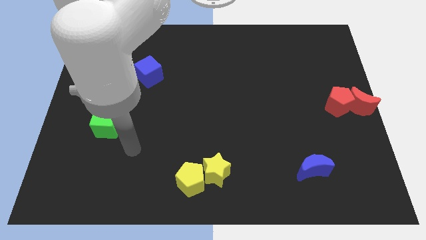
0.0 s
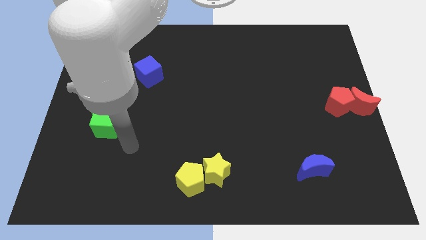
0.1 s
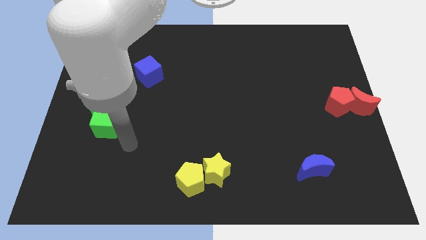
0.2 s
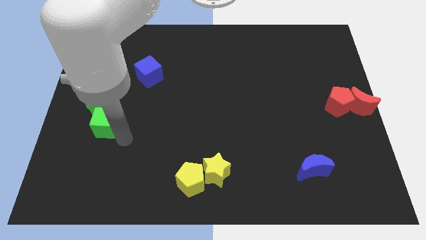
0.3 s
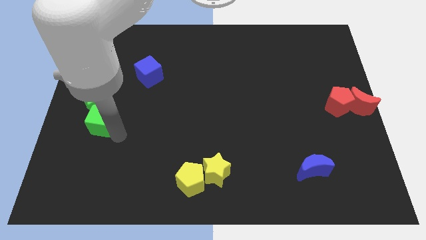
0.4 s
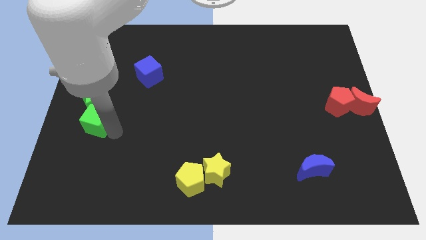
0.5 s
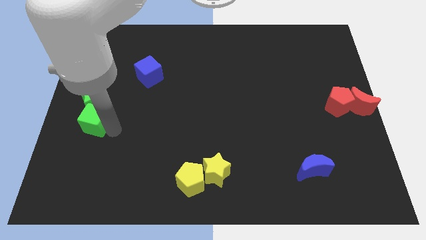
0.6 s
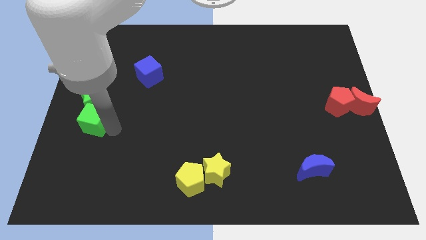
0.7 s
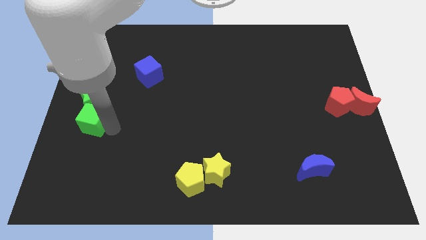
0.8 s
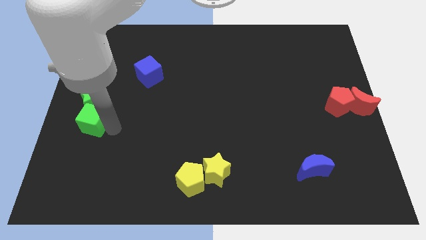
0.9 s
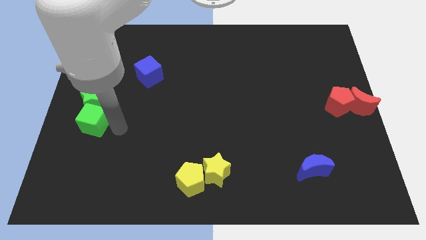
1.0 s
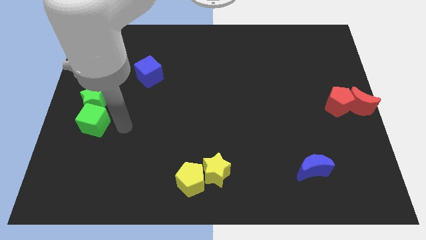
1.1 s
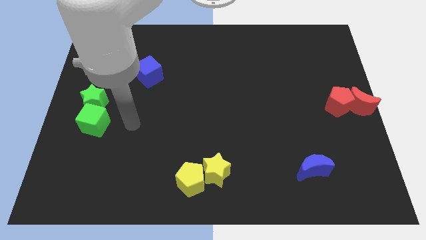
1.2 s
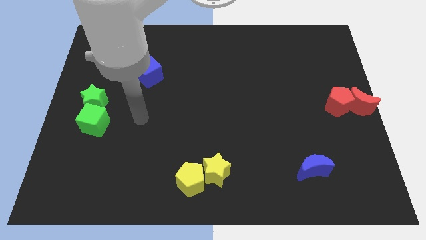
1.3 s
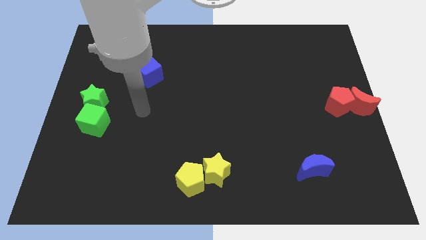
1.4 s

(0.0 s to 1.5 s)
push the green cube into the green star

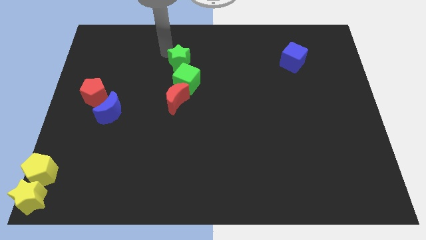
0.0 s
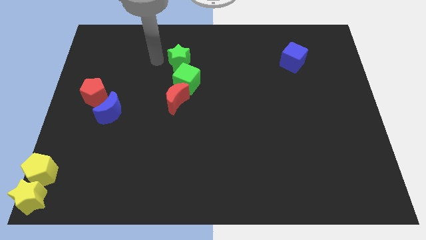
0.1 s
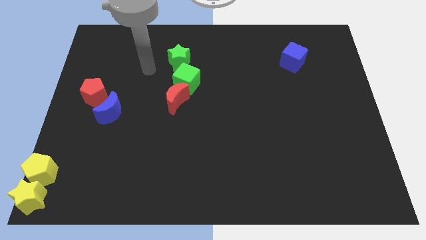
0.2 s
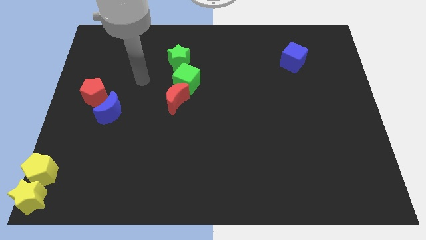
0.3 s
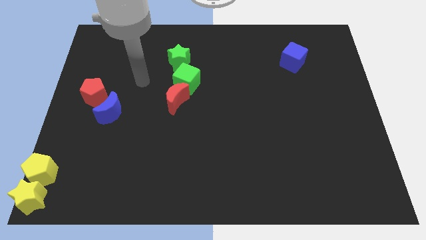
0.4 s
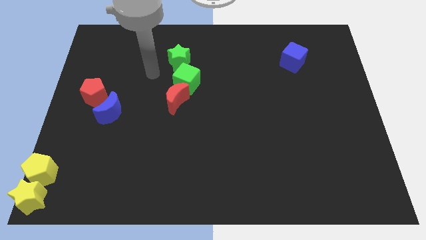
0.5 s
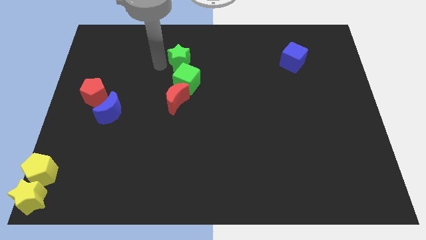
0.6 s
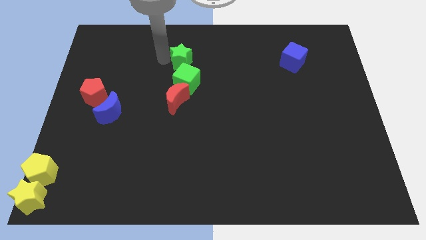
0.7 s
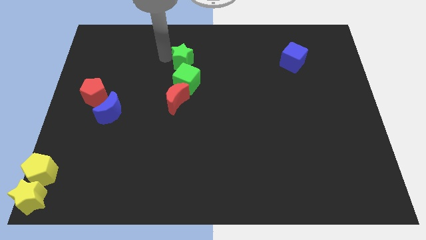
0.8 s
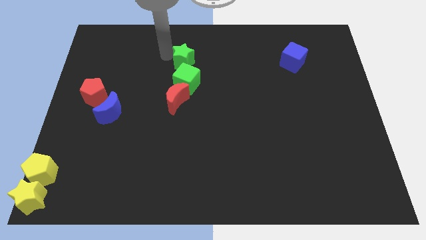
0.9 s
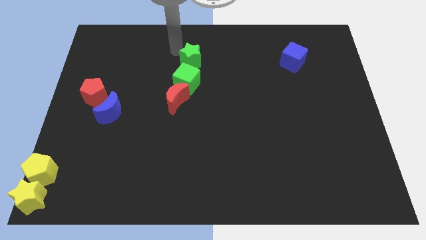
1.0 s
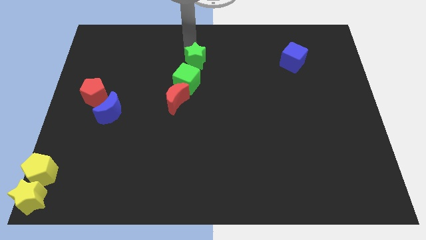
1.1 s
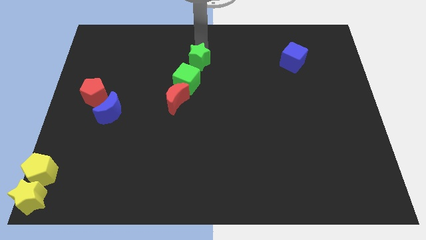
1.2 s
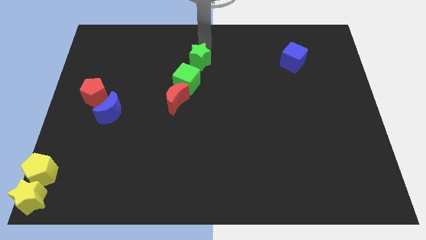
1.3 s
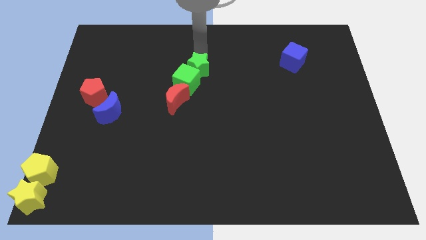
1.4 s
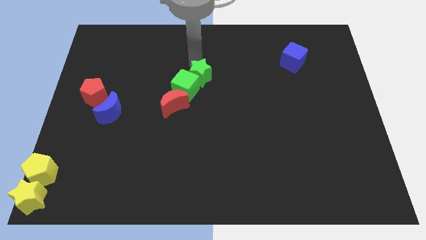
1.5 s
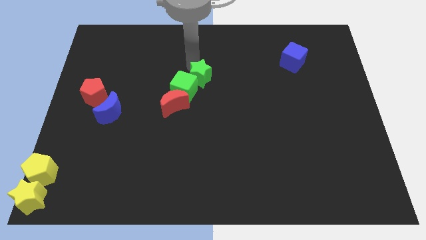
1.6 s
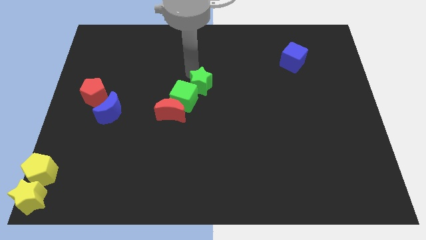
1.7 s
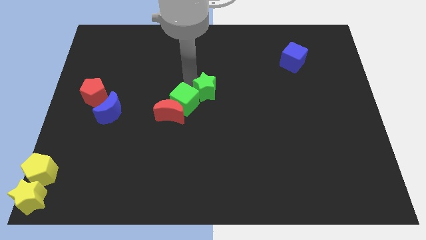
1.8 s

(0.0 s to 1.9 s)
push the green cube red moon with the green star

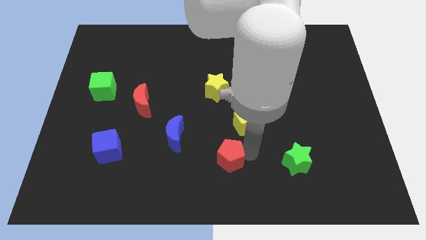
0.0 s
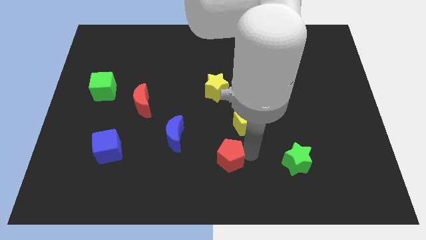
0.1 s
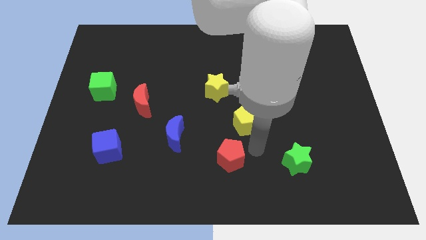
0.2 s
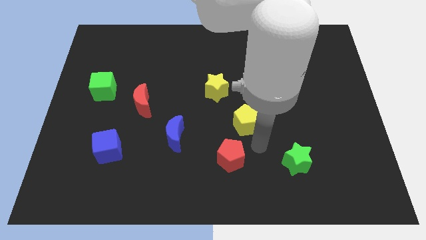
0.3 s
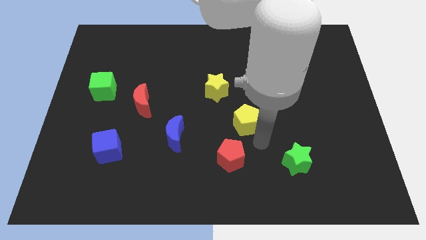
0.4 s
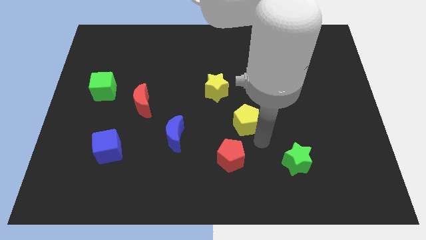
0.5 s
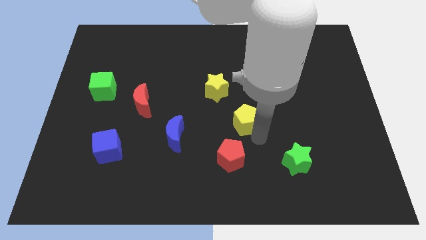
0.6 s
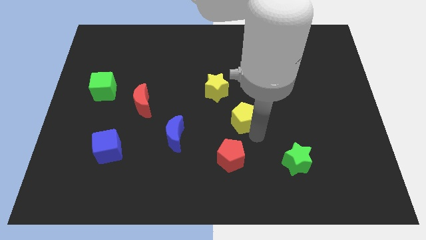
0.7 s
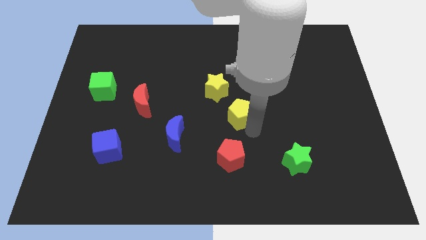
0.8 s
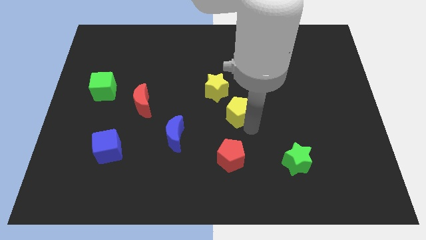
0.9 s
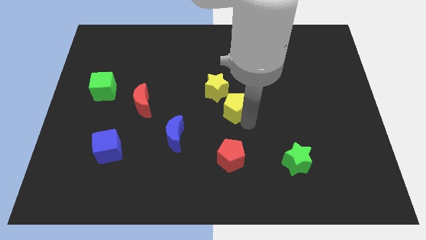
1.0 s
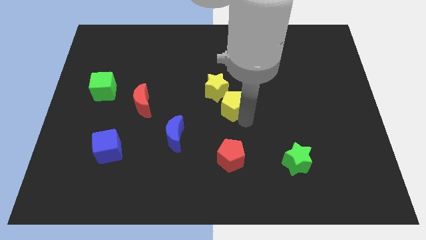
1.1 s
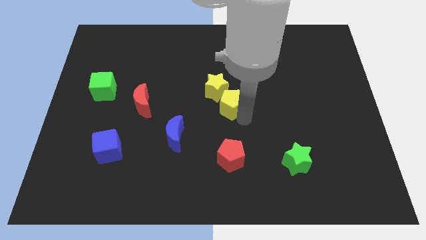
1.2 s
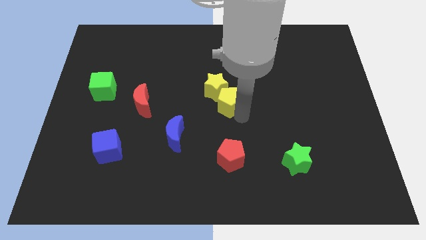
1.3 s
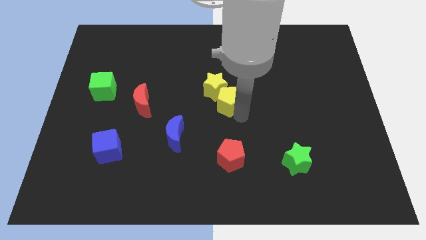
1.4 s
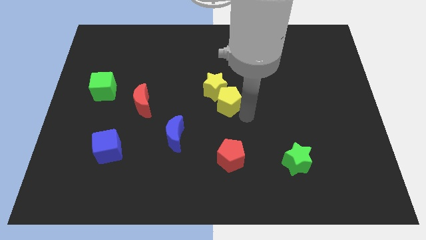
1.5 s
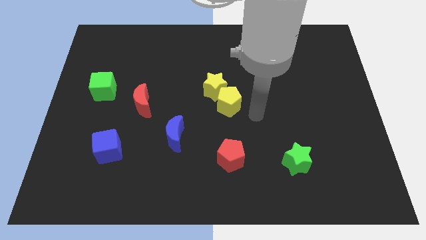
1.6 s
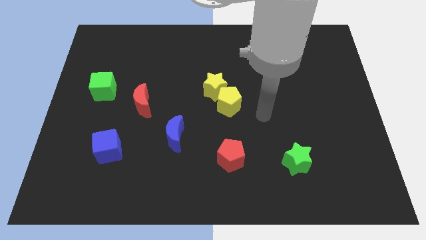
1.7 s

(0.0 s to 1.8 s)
push the yellow pentagon diagonal below yellow stra

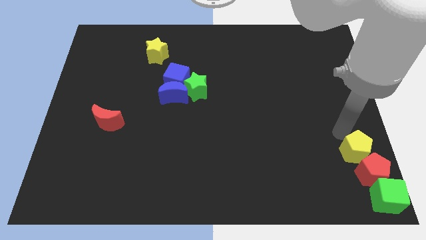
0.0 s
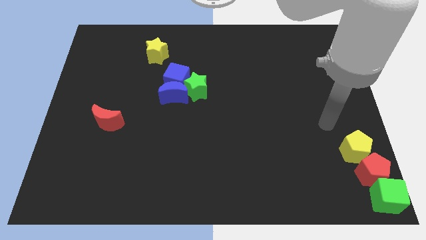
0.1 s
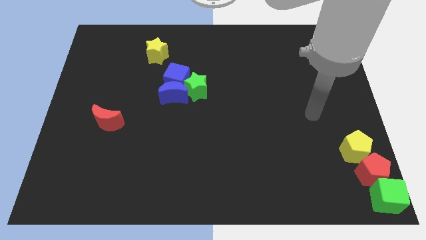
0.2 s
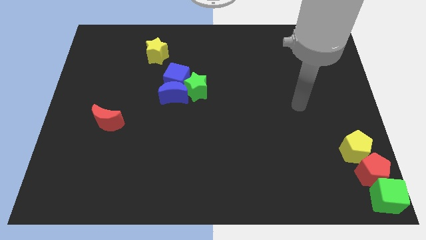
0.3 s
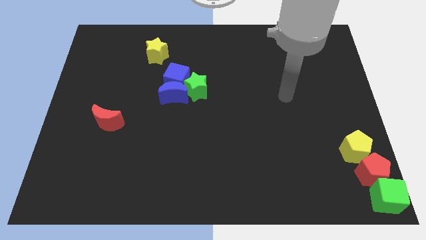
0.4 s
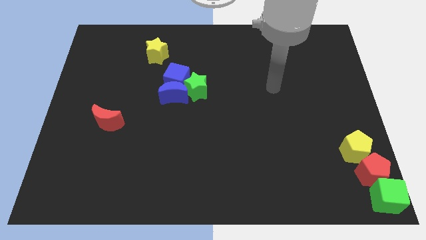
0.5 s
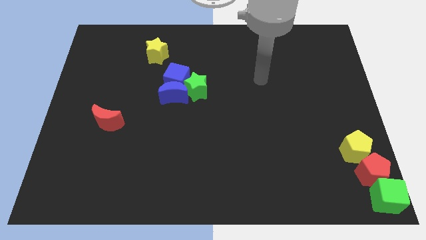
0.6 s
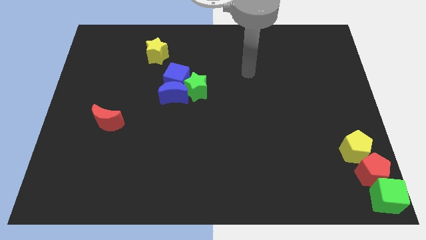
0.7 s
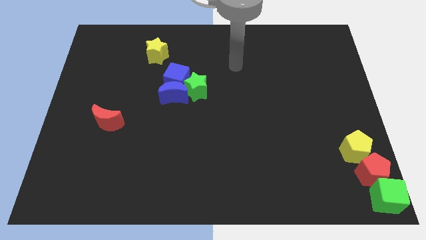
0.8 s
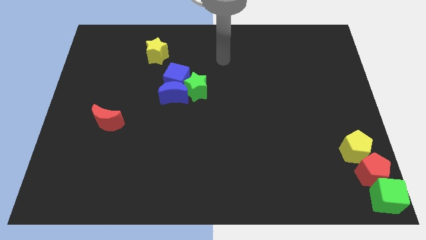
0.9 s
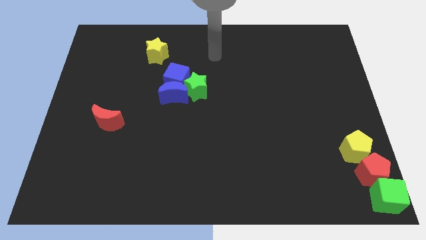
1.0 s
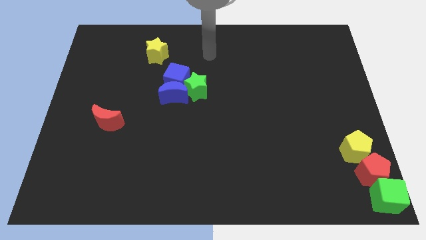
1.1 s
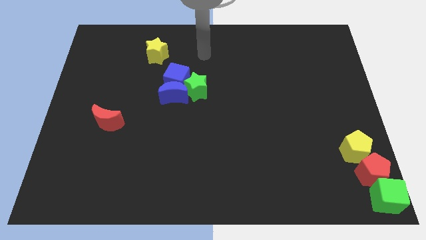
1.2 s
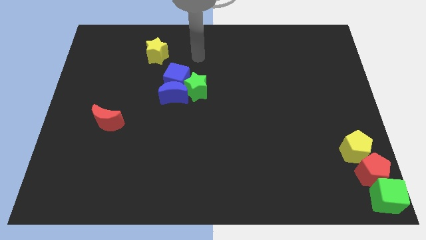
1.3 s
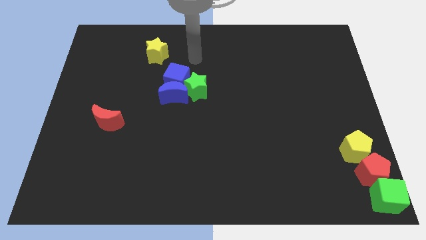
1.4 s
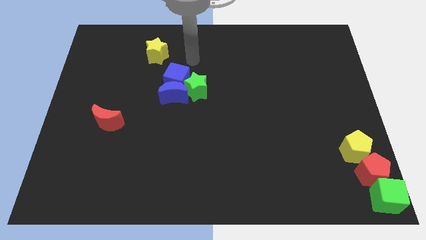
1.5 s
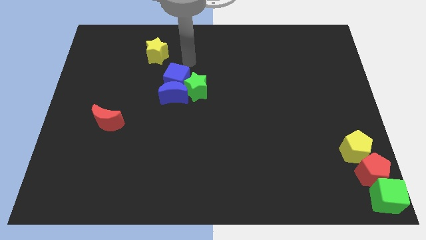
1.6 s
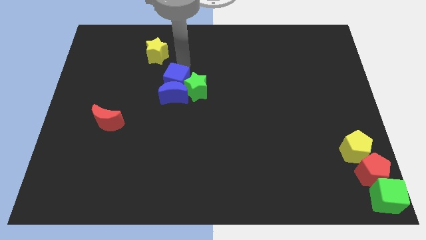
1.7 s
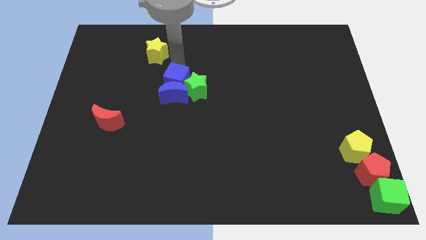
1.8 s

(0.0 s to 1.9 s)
move the arm towards top of the blue cube

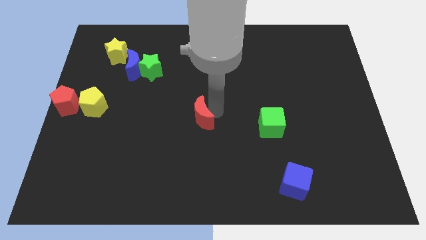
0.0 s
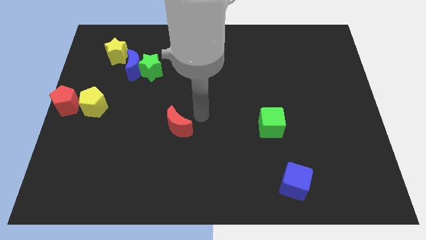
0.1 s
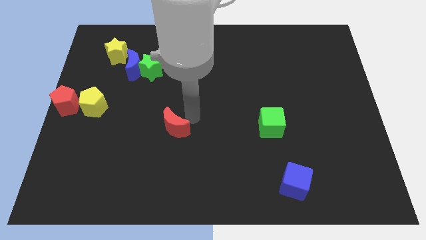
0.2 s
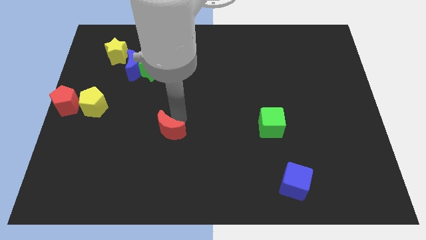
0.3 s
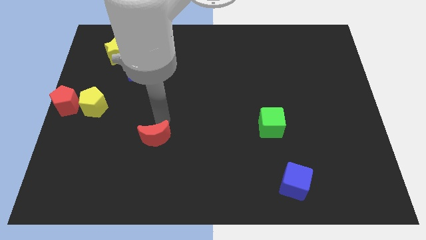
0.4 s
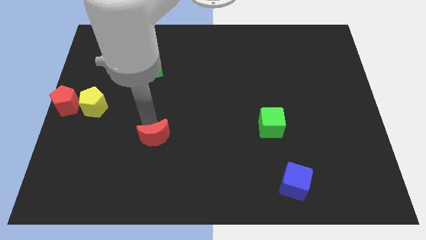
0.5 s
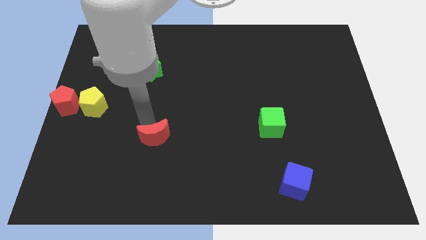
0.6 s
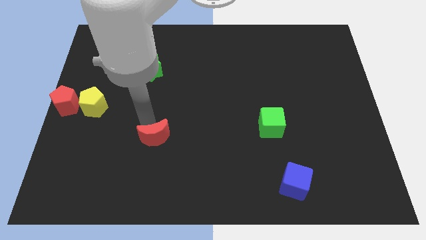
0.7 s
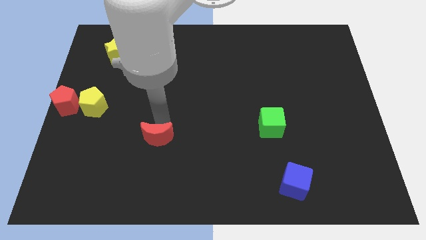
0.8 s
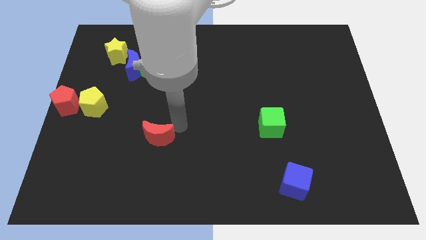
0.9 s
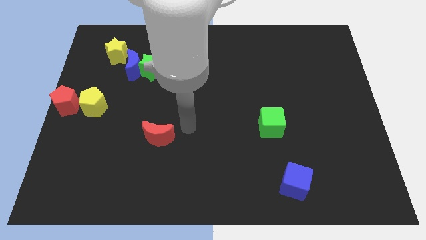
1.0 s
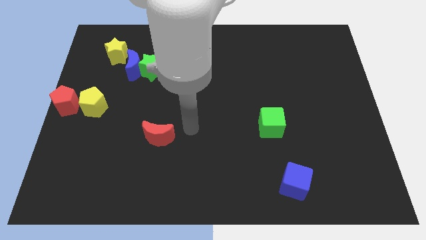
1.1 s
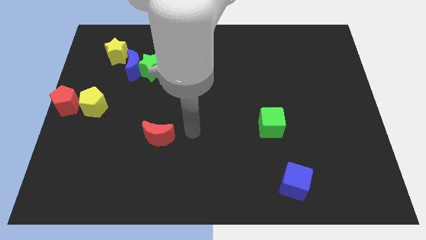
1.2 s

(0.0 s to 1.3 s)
move the red crescent to the bottom side of the green star

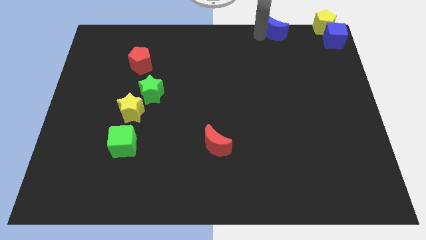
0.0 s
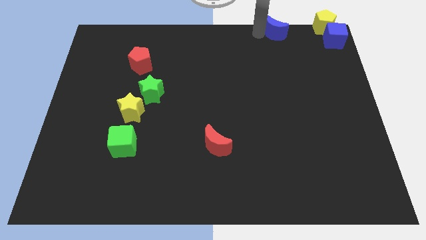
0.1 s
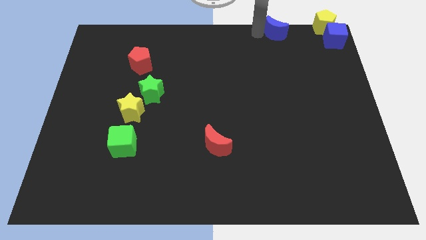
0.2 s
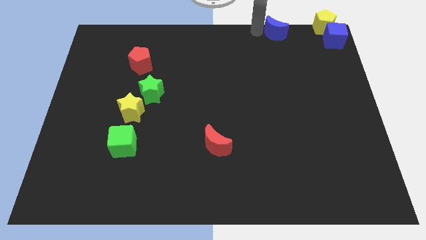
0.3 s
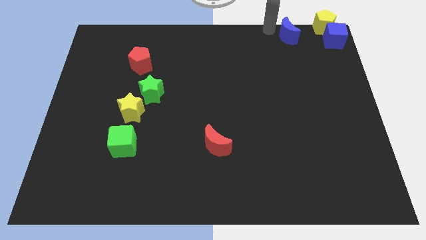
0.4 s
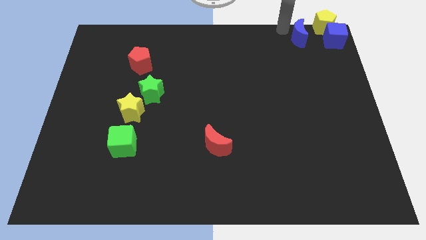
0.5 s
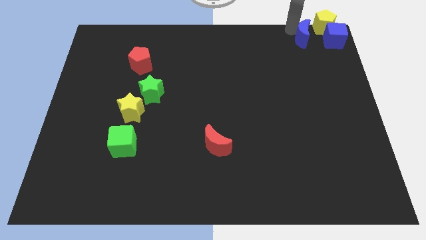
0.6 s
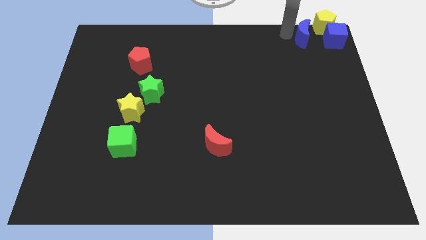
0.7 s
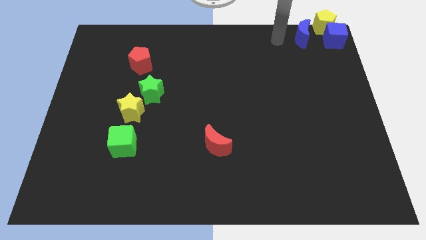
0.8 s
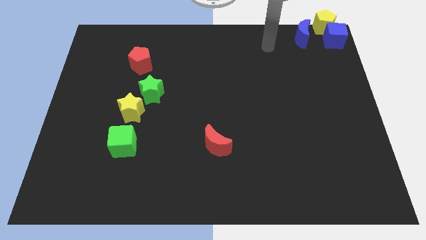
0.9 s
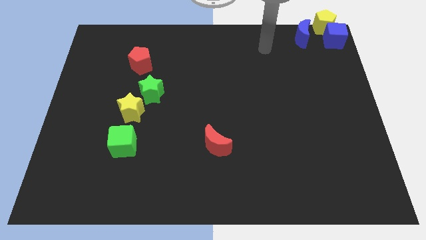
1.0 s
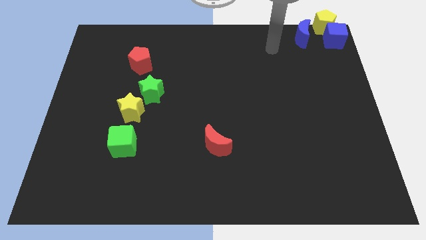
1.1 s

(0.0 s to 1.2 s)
push the blue crescent to the left of the blue cube
